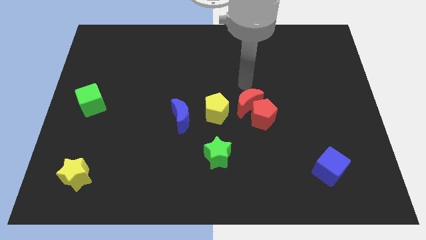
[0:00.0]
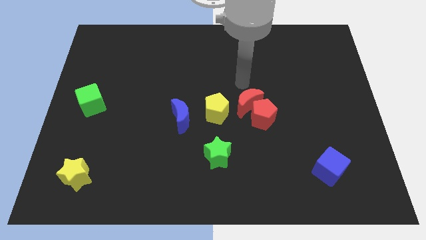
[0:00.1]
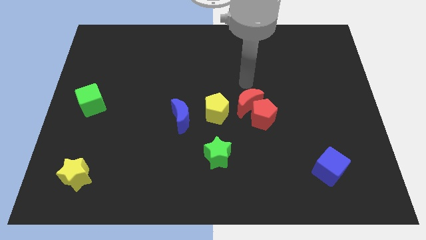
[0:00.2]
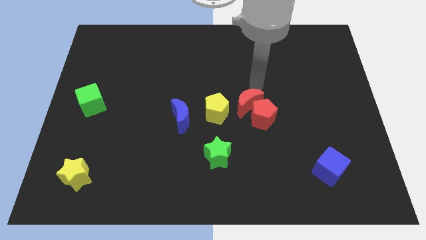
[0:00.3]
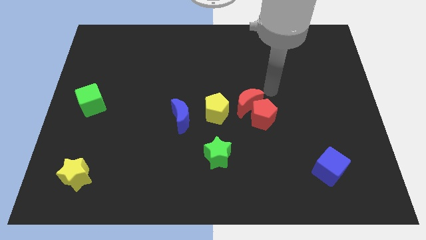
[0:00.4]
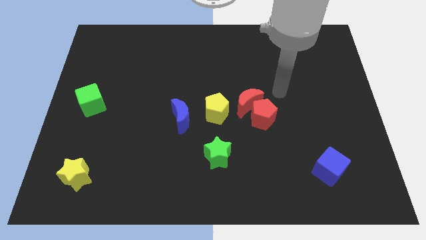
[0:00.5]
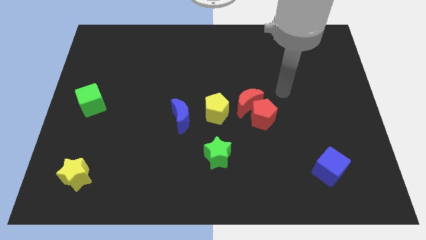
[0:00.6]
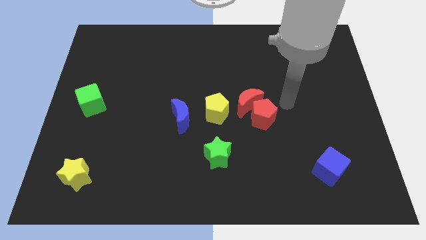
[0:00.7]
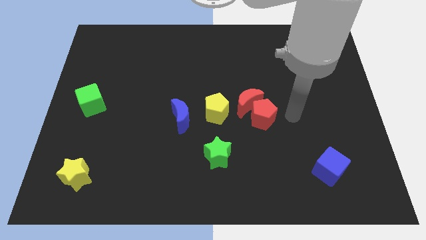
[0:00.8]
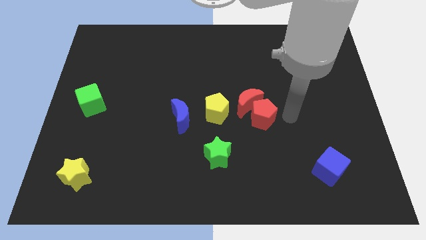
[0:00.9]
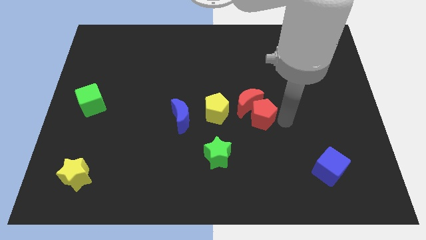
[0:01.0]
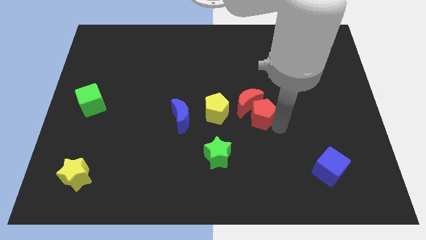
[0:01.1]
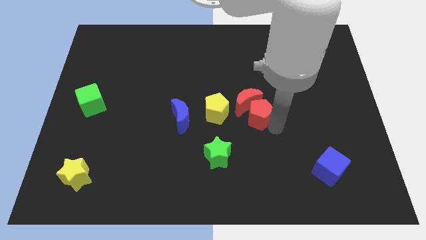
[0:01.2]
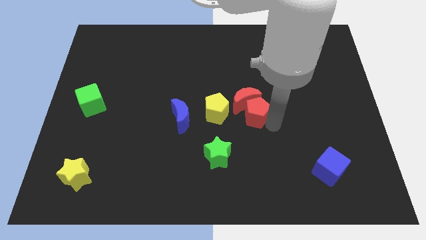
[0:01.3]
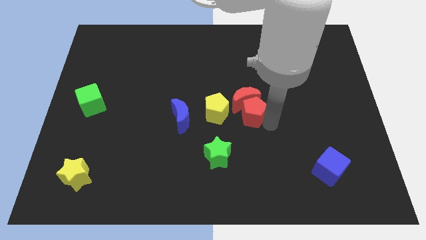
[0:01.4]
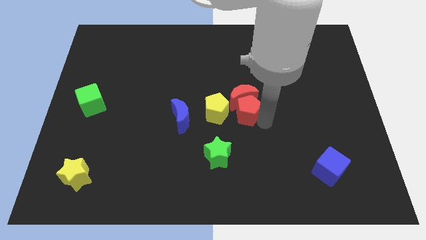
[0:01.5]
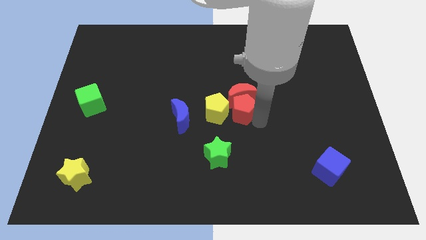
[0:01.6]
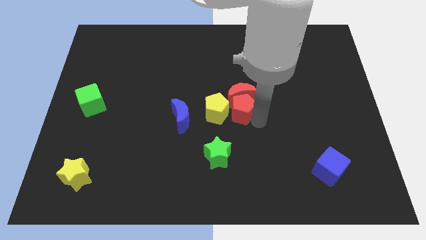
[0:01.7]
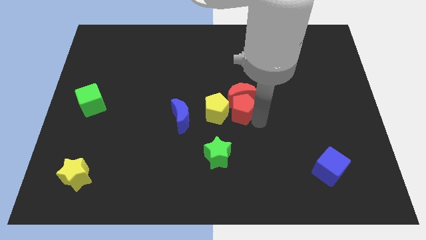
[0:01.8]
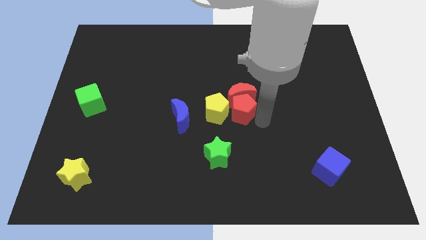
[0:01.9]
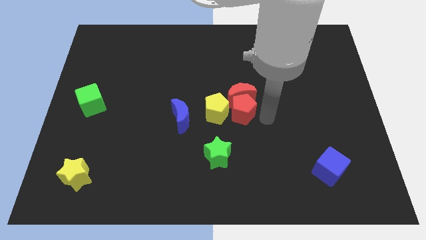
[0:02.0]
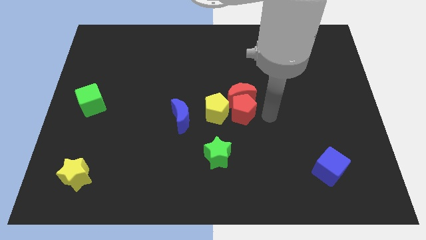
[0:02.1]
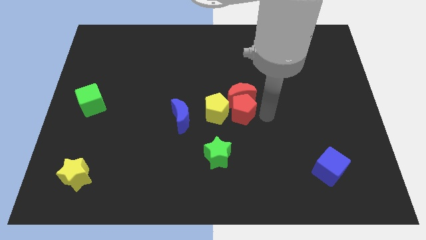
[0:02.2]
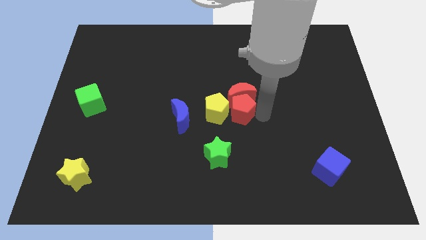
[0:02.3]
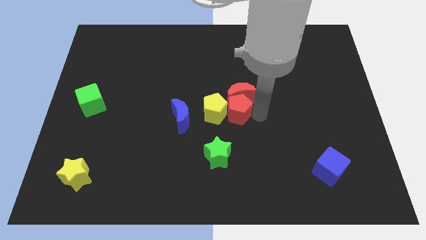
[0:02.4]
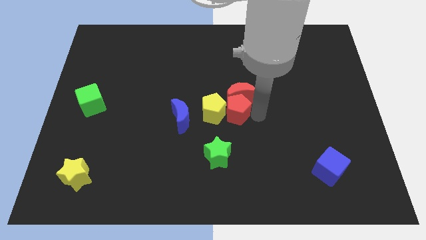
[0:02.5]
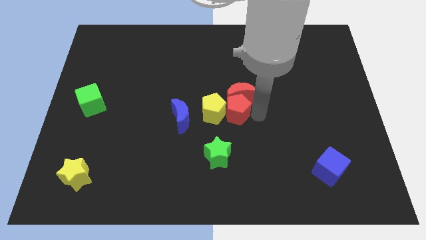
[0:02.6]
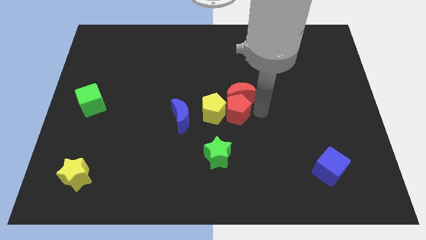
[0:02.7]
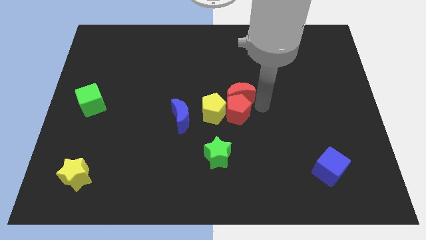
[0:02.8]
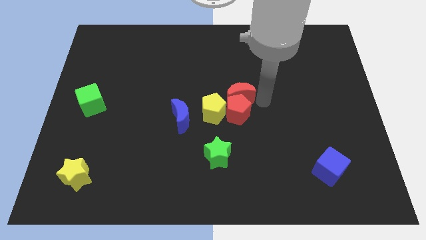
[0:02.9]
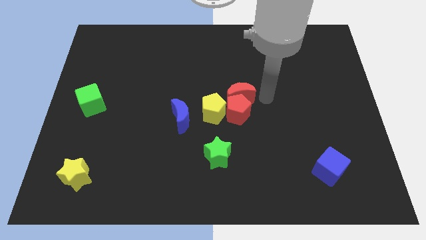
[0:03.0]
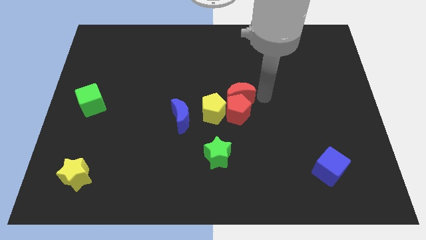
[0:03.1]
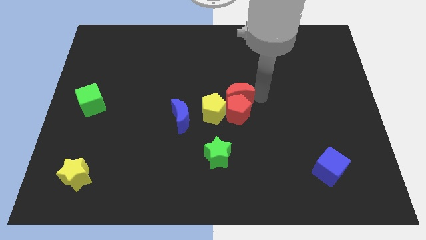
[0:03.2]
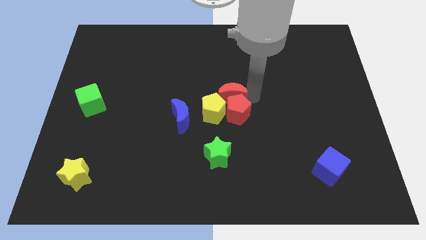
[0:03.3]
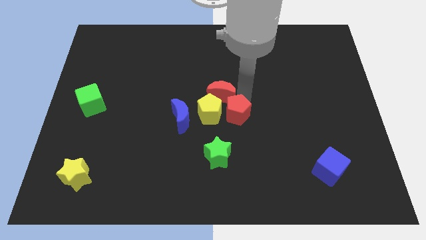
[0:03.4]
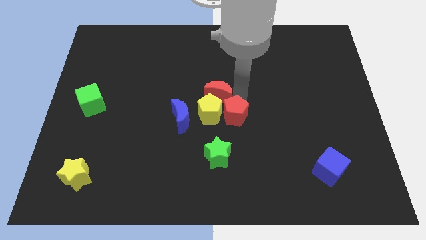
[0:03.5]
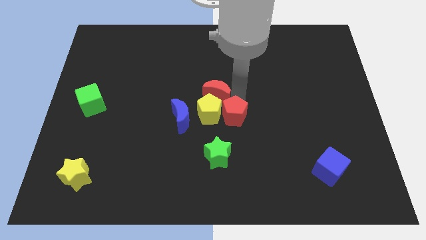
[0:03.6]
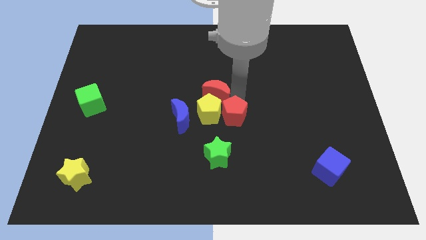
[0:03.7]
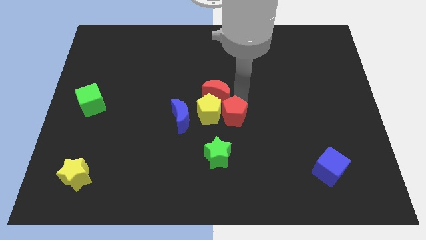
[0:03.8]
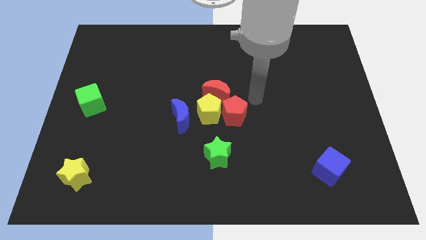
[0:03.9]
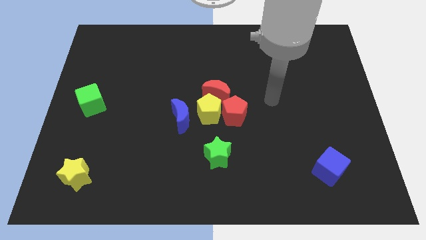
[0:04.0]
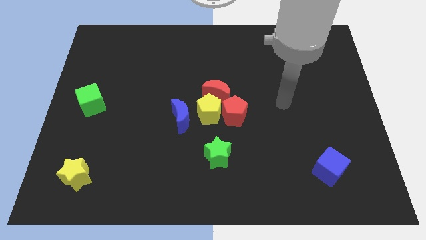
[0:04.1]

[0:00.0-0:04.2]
push both the red blocks into the yellow pentagon

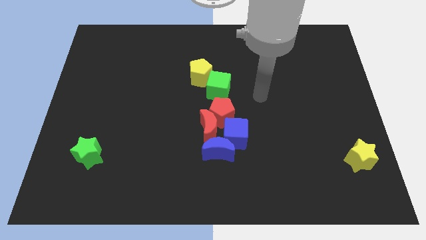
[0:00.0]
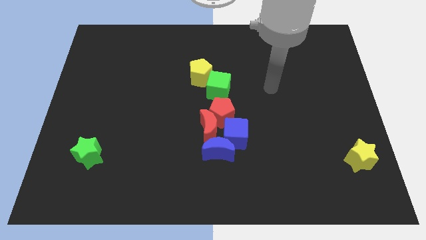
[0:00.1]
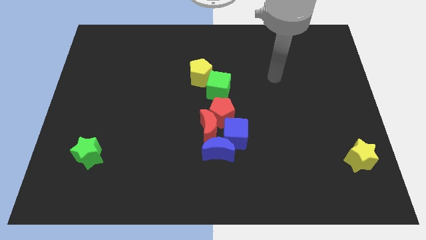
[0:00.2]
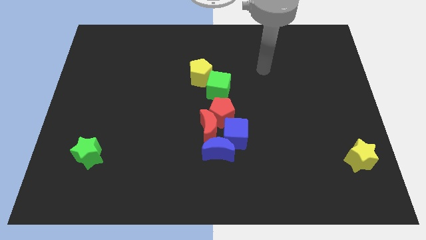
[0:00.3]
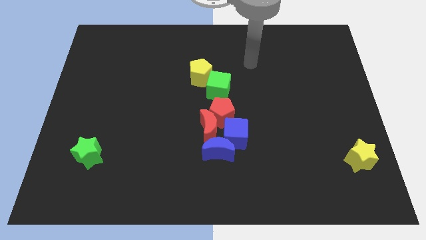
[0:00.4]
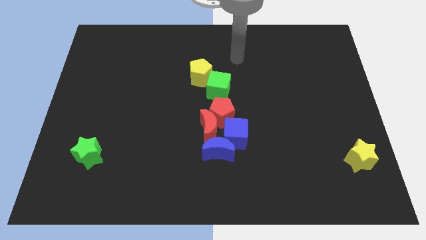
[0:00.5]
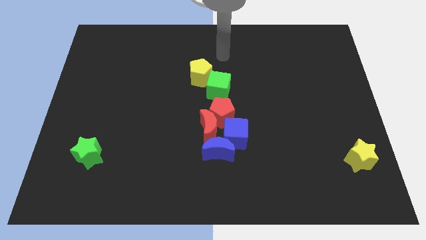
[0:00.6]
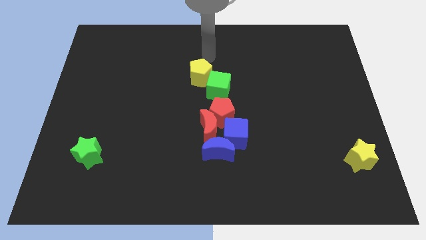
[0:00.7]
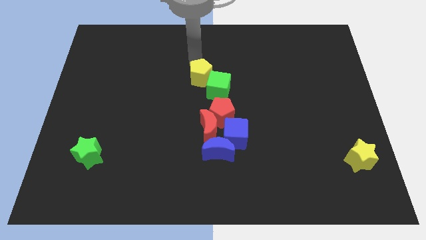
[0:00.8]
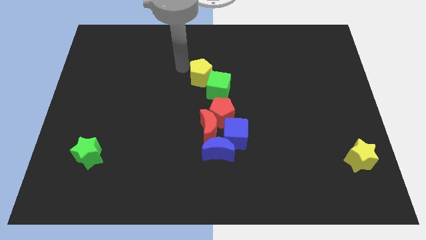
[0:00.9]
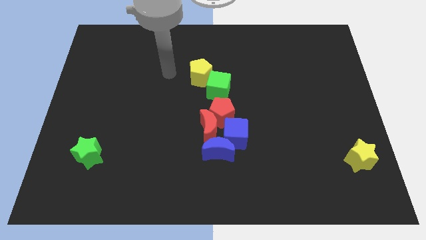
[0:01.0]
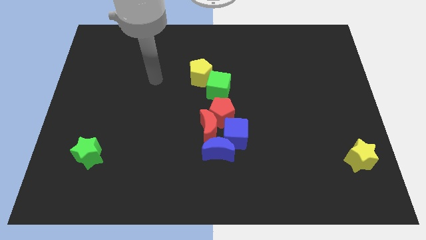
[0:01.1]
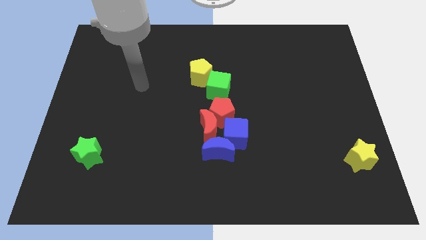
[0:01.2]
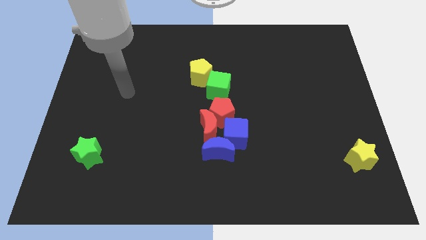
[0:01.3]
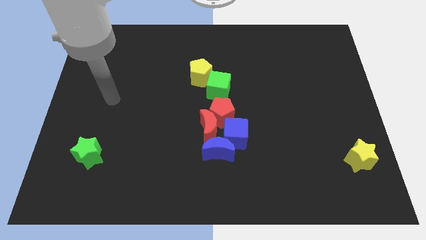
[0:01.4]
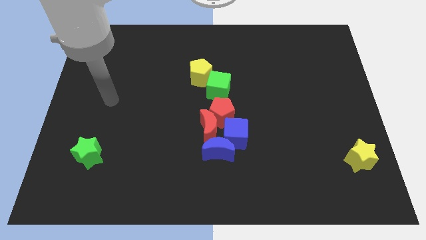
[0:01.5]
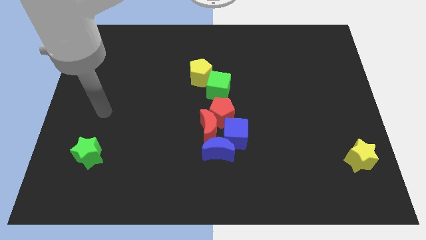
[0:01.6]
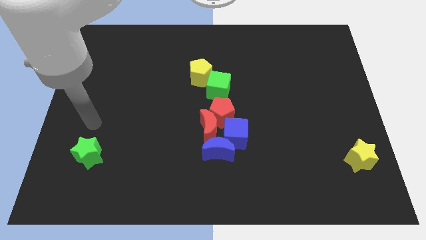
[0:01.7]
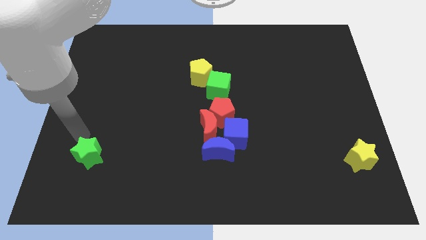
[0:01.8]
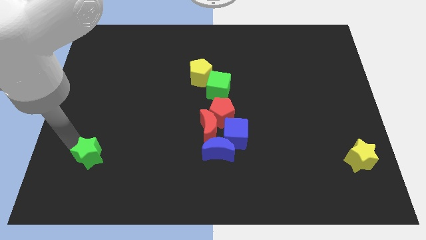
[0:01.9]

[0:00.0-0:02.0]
move your arm towards the green star

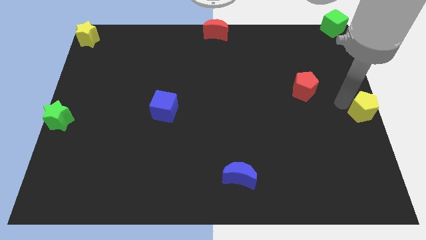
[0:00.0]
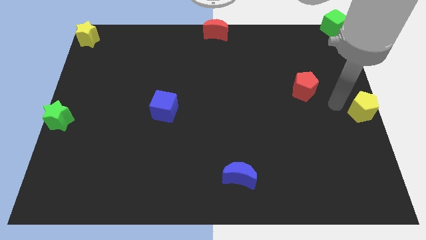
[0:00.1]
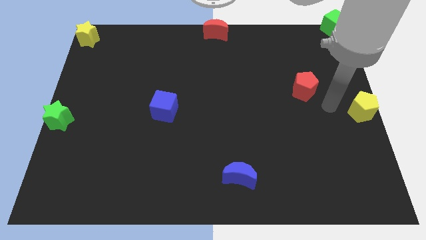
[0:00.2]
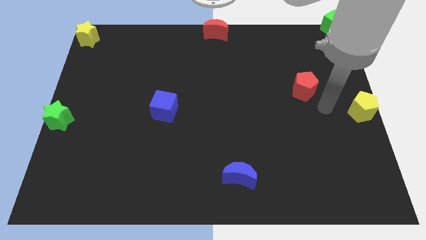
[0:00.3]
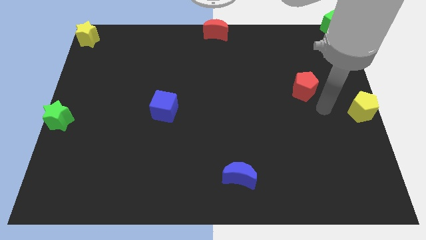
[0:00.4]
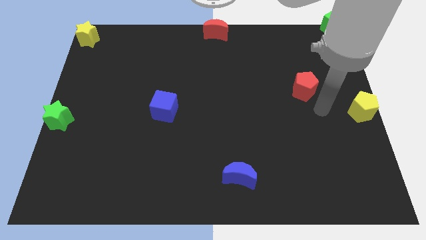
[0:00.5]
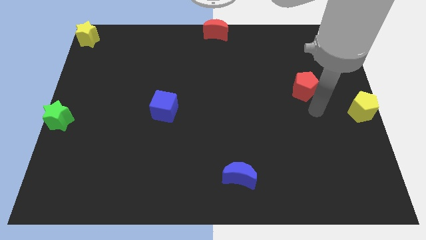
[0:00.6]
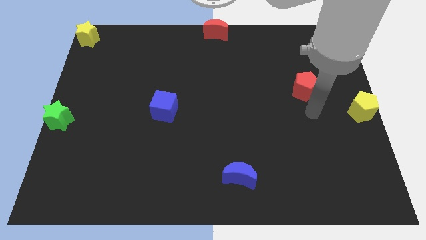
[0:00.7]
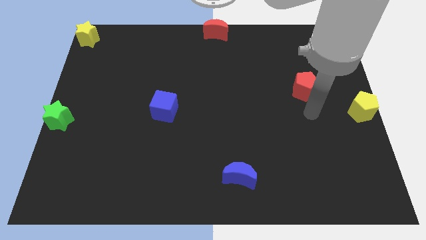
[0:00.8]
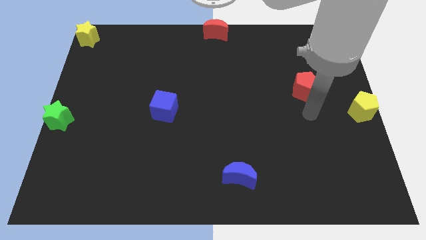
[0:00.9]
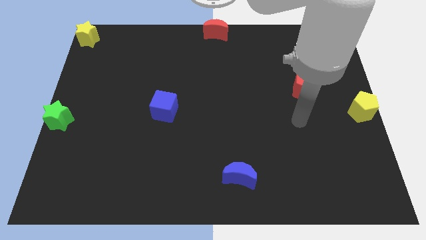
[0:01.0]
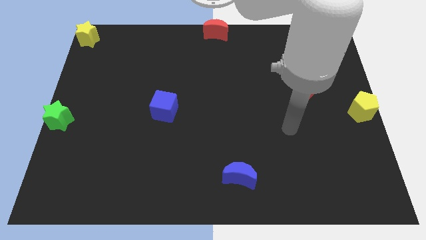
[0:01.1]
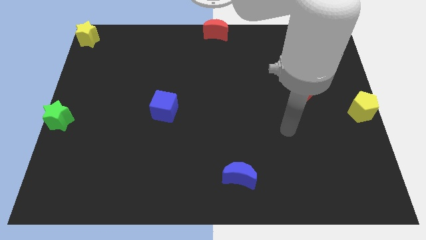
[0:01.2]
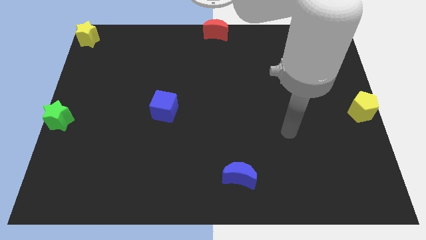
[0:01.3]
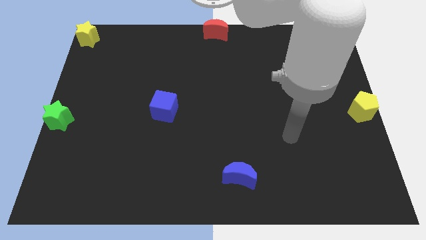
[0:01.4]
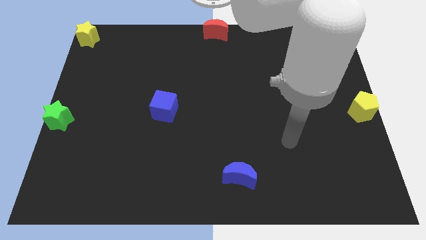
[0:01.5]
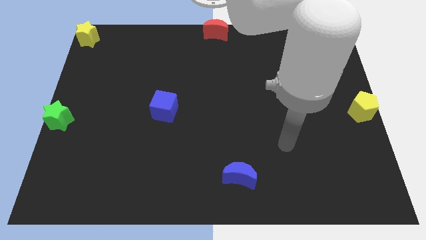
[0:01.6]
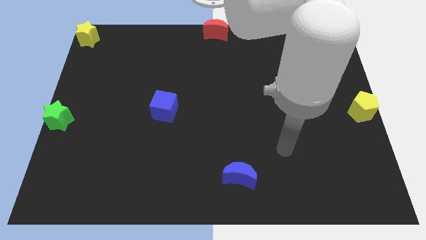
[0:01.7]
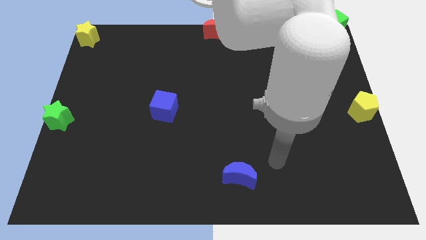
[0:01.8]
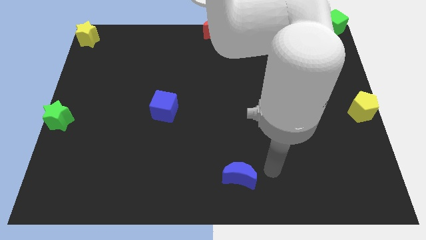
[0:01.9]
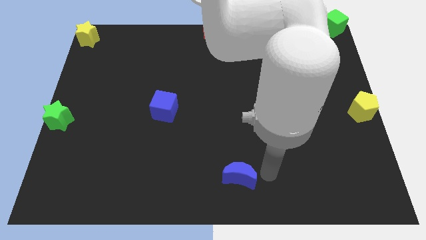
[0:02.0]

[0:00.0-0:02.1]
move your arm away from yellow pentagon

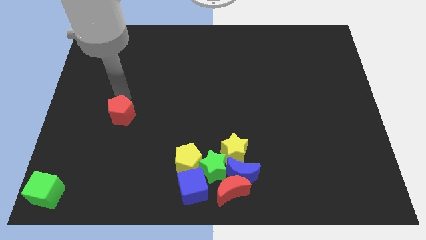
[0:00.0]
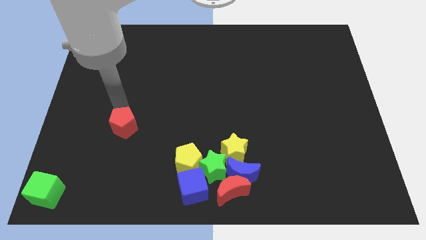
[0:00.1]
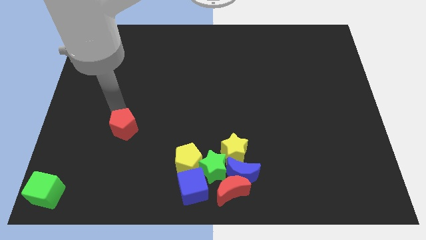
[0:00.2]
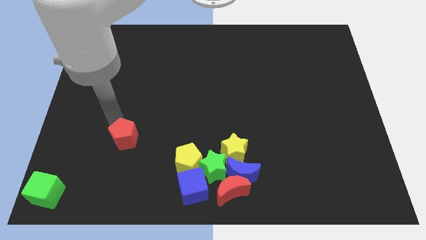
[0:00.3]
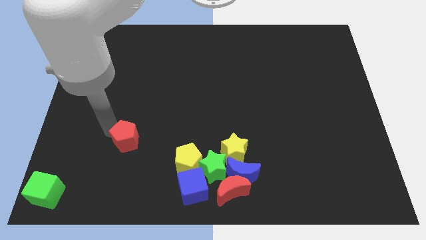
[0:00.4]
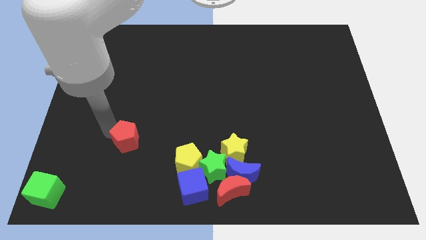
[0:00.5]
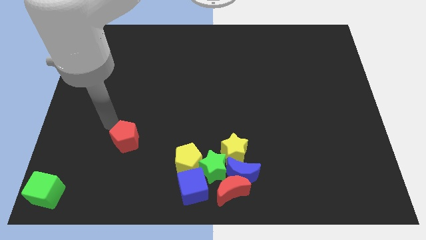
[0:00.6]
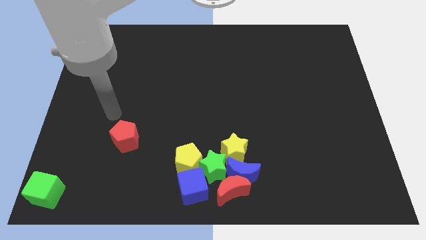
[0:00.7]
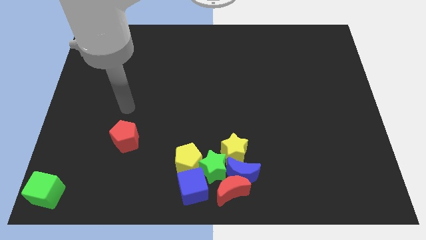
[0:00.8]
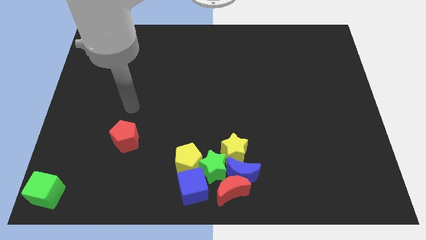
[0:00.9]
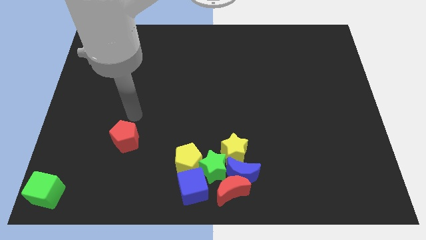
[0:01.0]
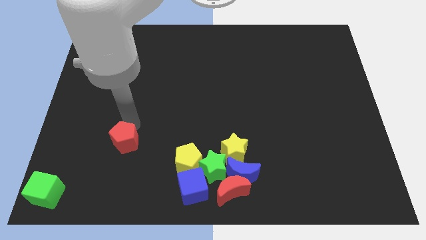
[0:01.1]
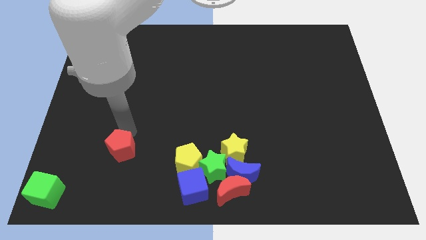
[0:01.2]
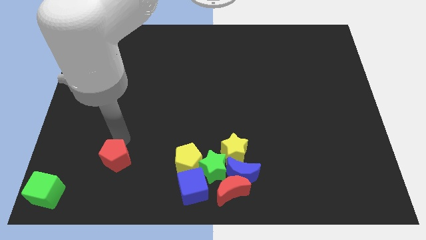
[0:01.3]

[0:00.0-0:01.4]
place the red pentagon diagonal to the green cube
